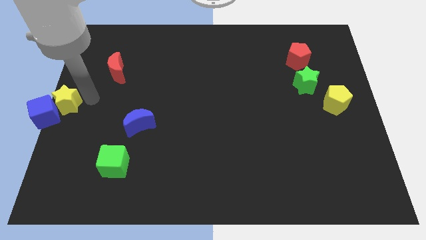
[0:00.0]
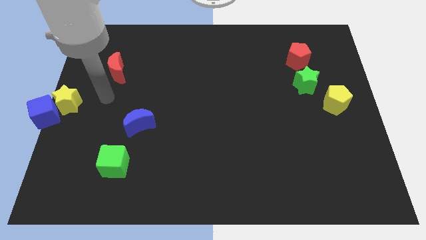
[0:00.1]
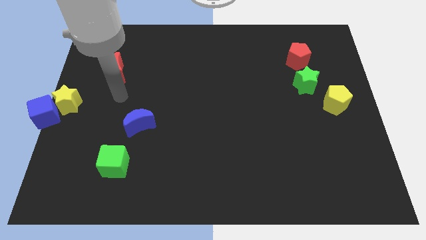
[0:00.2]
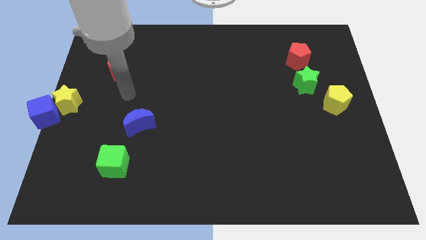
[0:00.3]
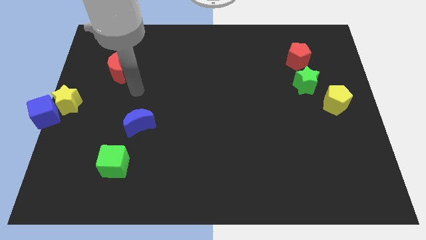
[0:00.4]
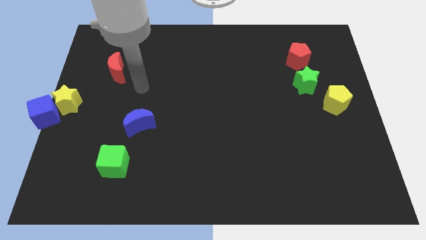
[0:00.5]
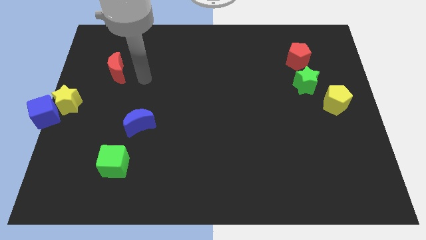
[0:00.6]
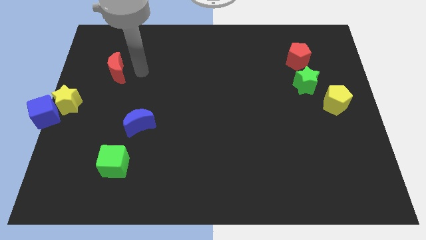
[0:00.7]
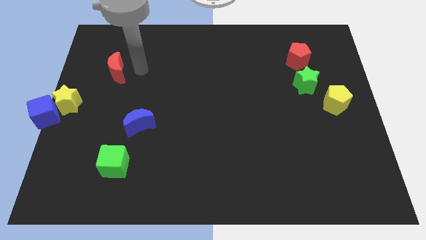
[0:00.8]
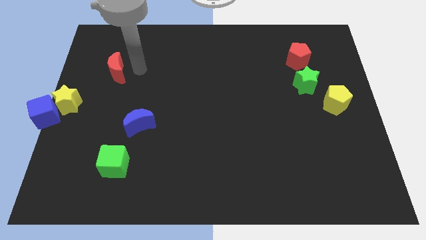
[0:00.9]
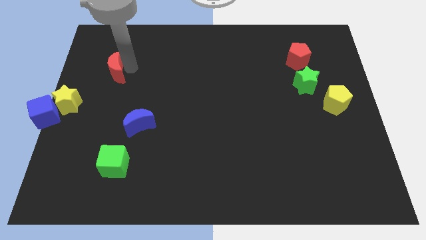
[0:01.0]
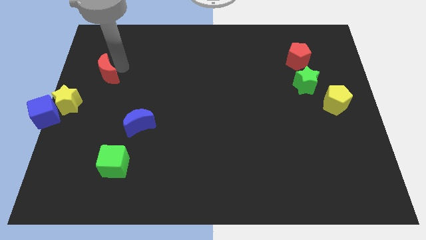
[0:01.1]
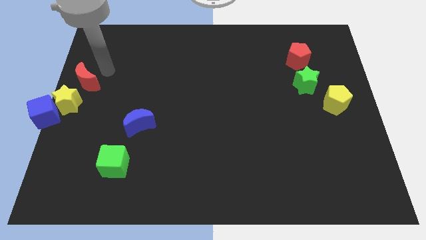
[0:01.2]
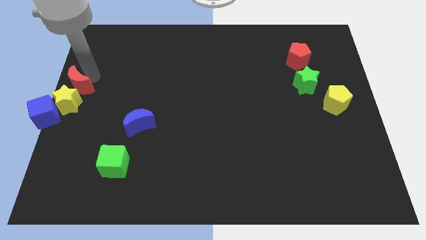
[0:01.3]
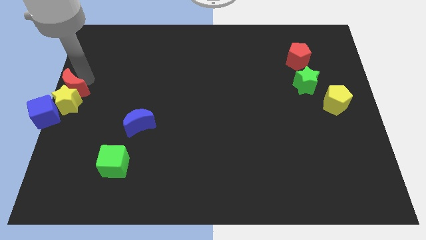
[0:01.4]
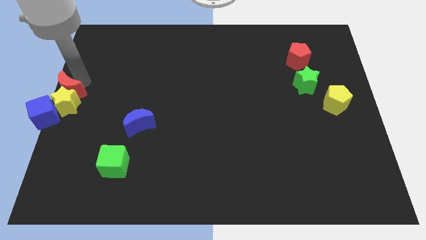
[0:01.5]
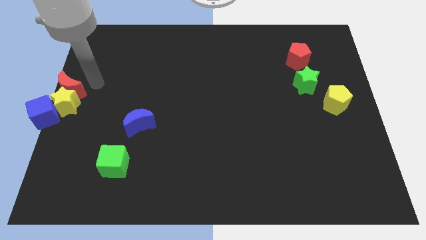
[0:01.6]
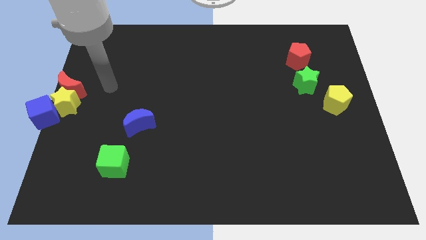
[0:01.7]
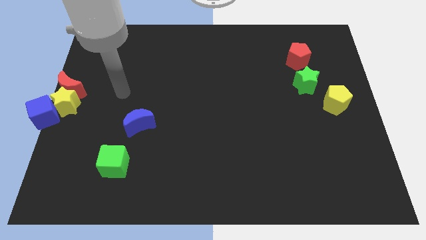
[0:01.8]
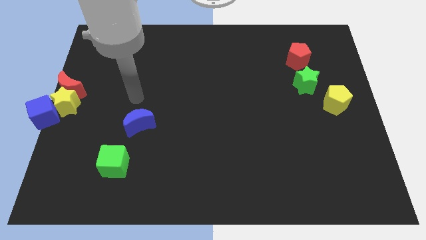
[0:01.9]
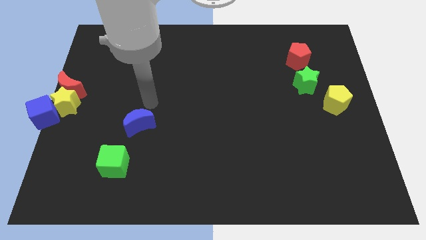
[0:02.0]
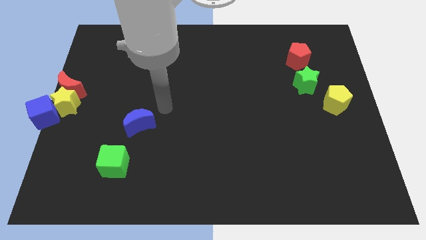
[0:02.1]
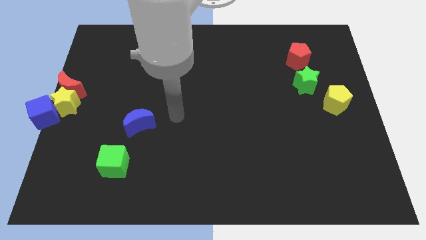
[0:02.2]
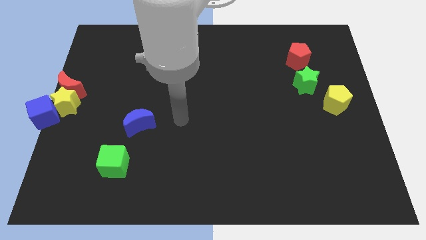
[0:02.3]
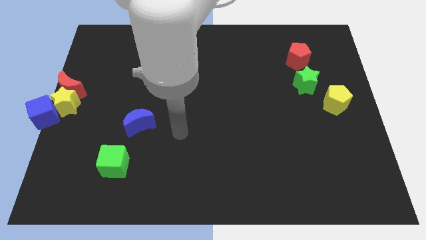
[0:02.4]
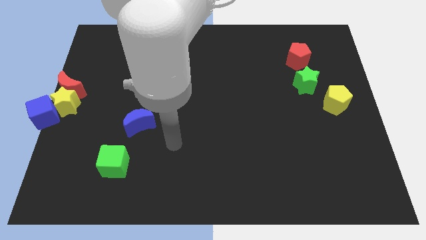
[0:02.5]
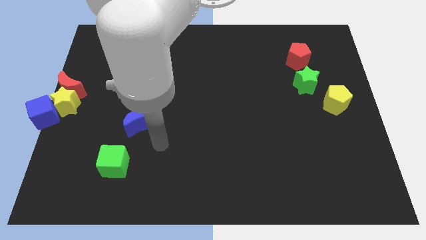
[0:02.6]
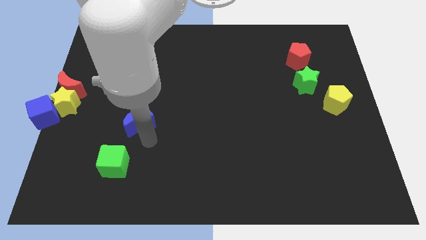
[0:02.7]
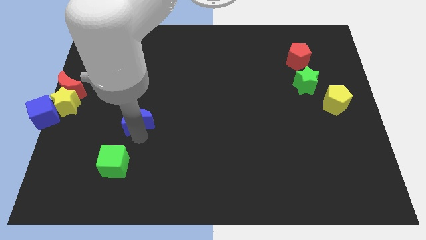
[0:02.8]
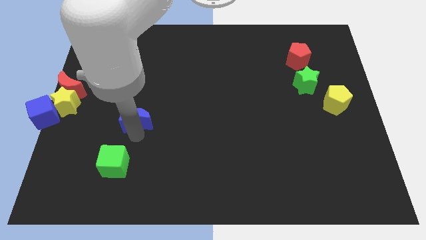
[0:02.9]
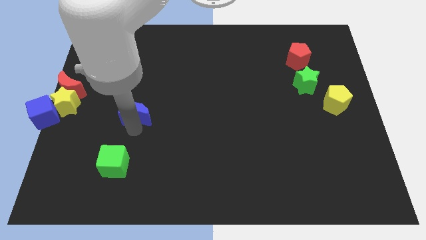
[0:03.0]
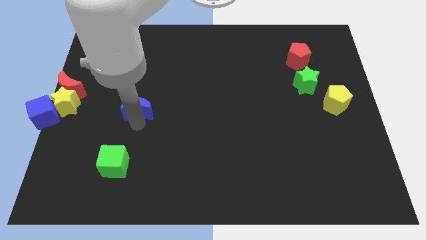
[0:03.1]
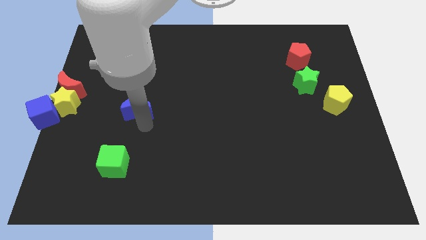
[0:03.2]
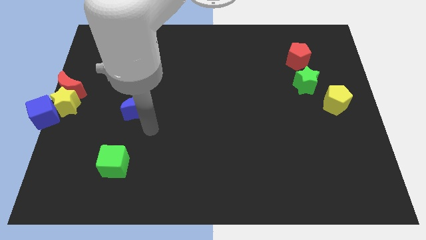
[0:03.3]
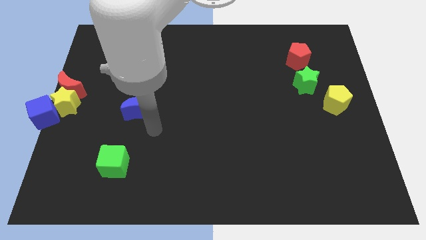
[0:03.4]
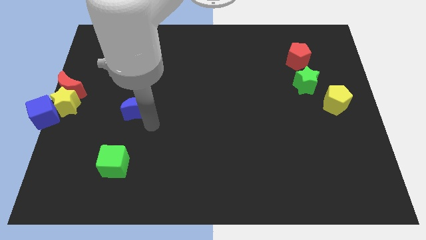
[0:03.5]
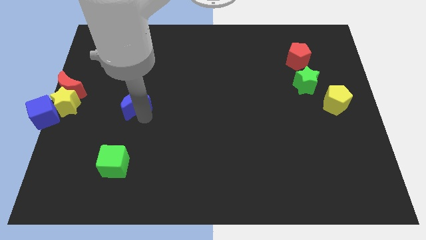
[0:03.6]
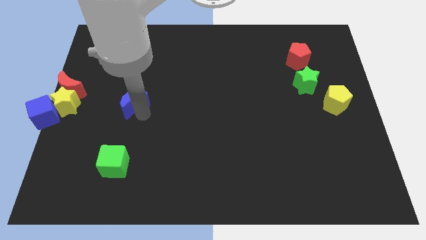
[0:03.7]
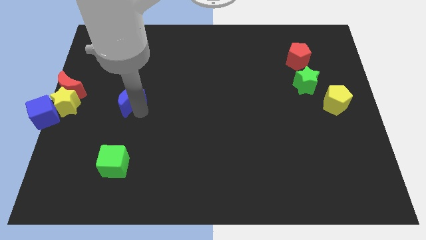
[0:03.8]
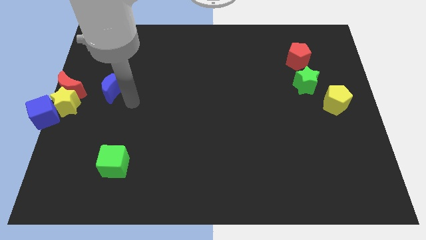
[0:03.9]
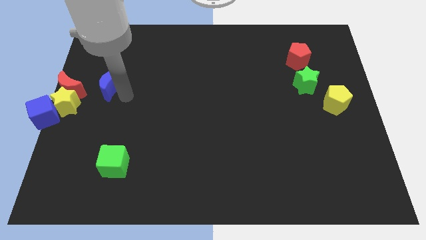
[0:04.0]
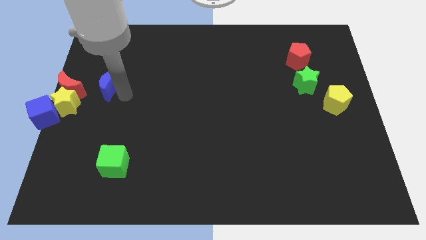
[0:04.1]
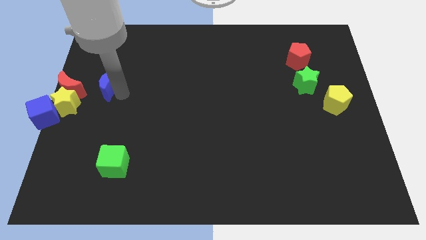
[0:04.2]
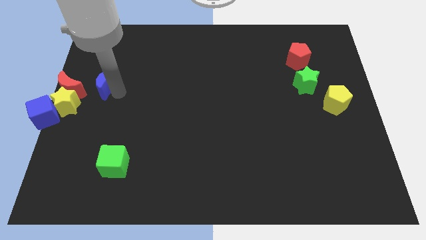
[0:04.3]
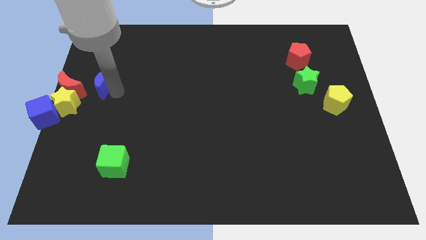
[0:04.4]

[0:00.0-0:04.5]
move the blue moon to the right side of the red moon

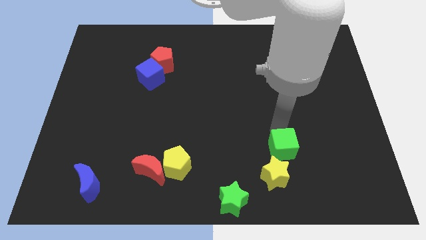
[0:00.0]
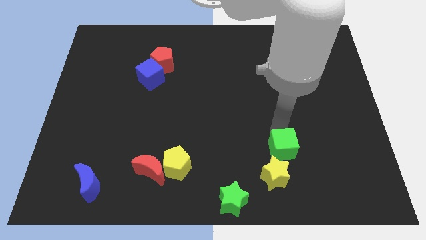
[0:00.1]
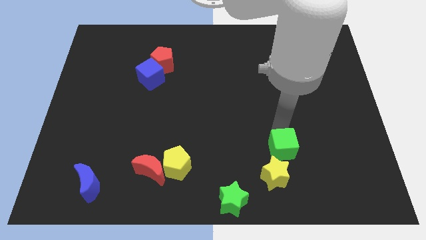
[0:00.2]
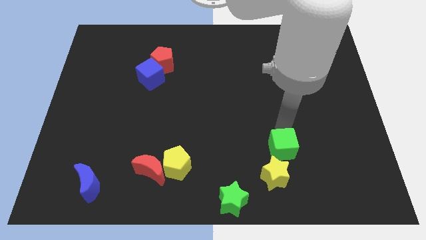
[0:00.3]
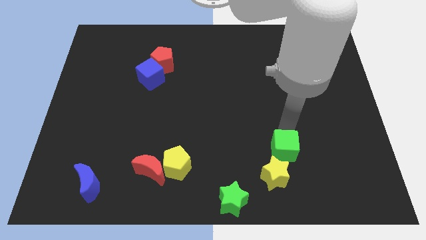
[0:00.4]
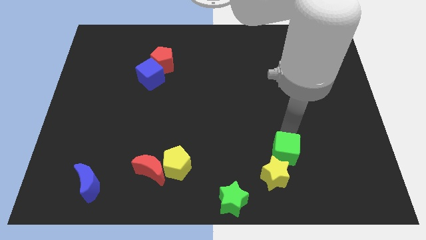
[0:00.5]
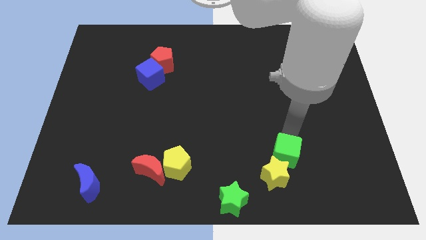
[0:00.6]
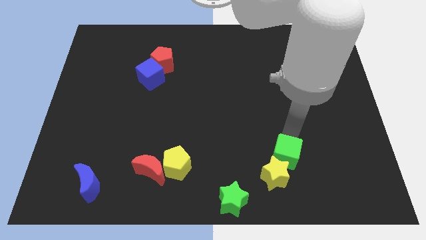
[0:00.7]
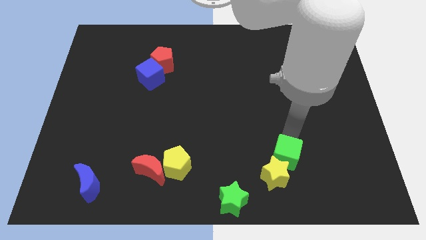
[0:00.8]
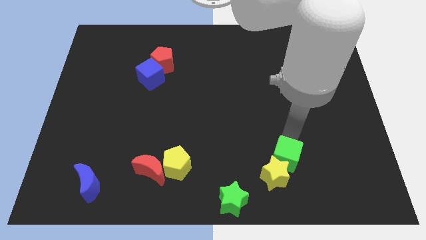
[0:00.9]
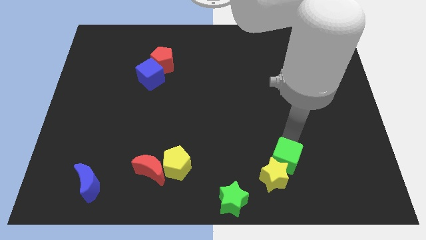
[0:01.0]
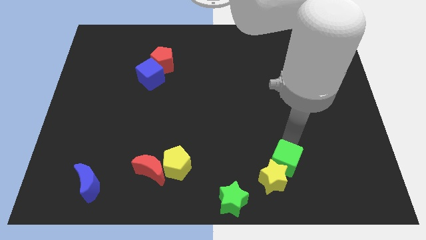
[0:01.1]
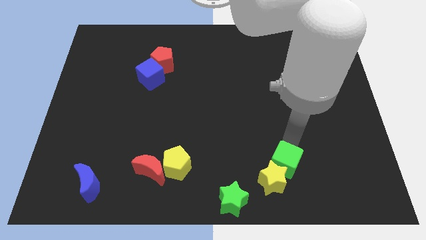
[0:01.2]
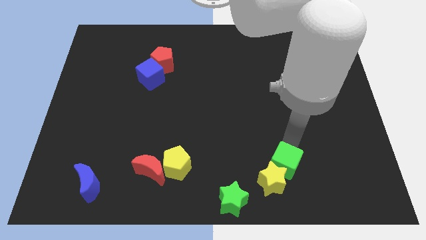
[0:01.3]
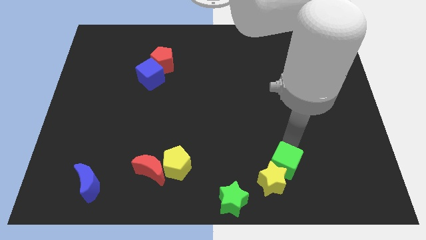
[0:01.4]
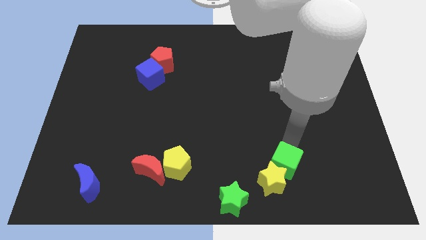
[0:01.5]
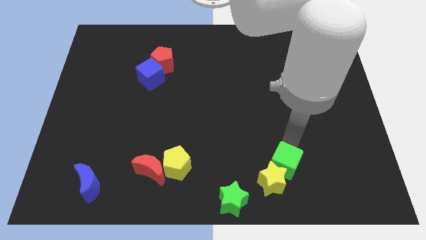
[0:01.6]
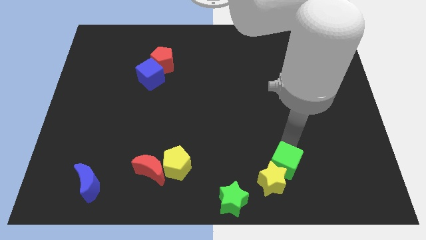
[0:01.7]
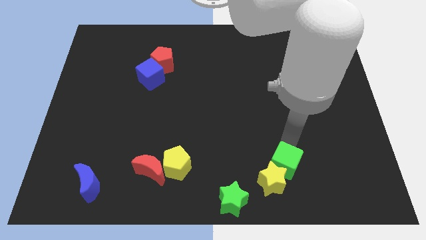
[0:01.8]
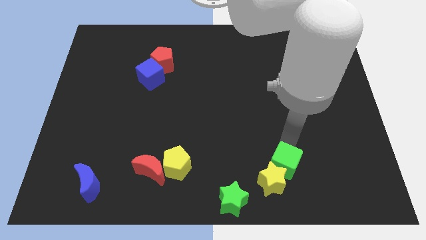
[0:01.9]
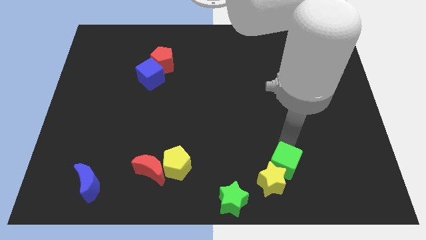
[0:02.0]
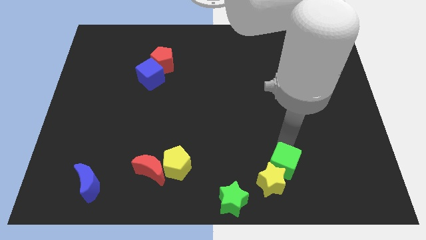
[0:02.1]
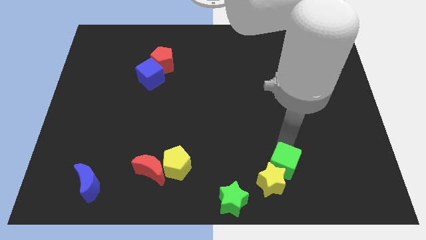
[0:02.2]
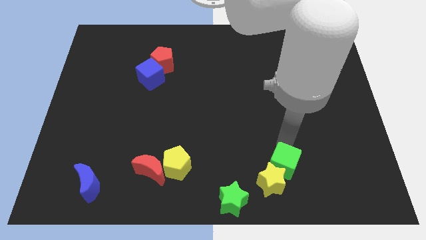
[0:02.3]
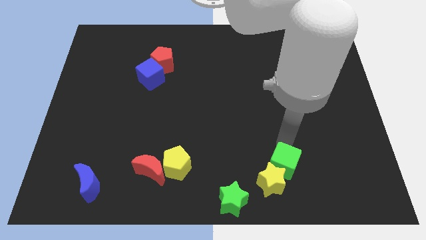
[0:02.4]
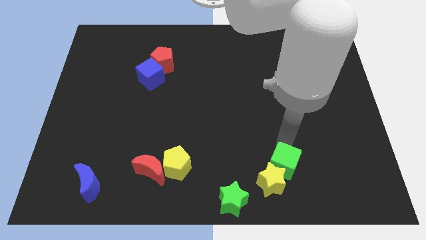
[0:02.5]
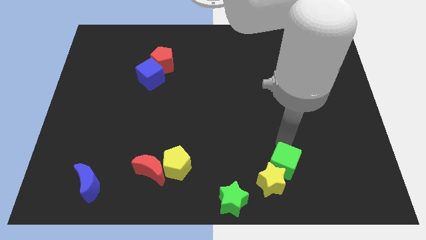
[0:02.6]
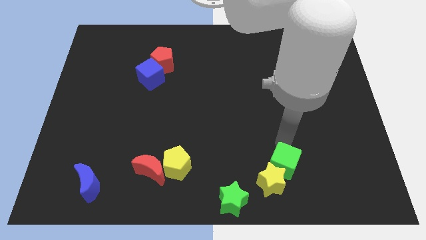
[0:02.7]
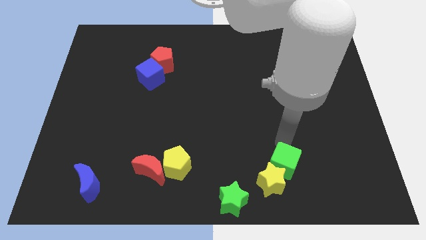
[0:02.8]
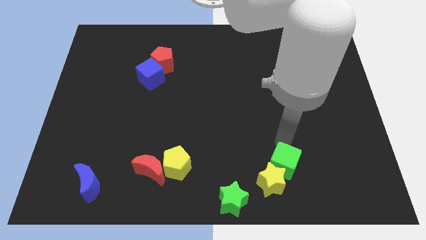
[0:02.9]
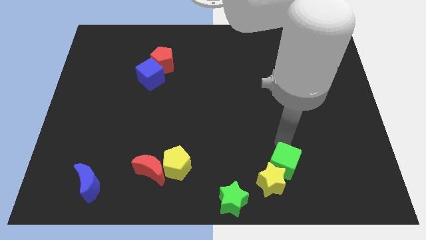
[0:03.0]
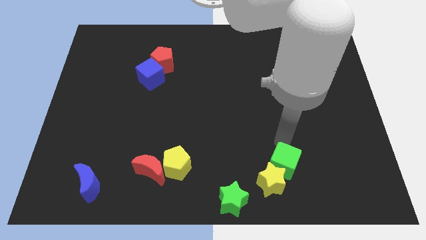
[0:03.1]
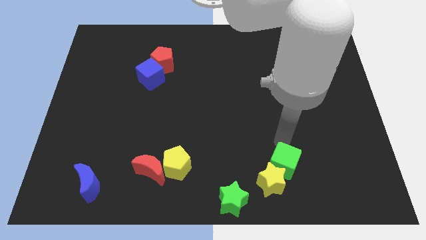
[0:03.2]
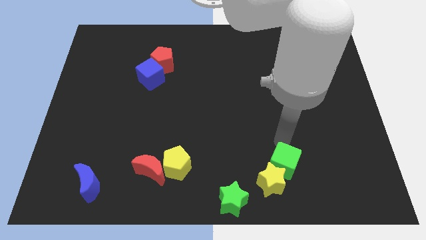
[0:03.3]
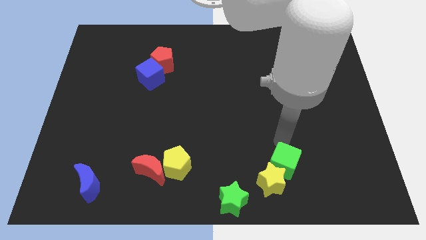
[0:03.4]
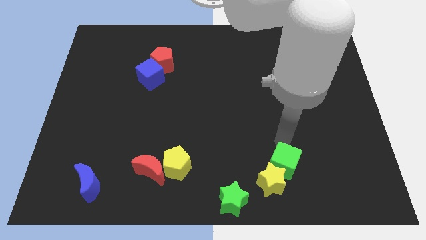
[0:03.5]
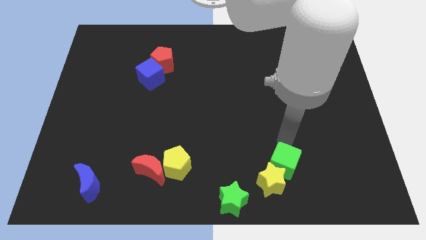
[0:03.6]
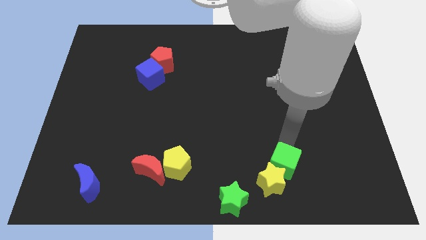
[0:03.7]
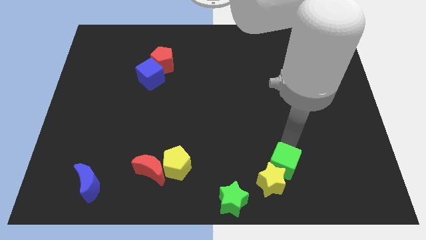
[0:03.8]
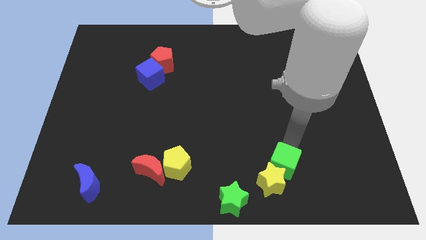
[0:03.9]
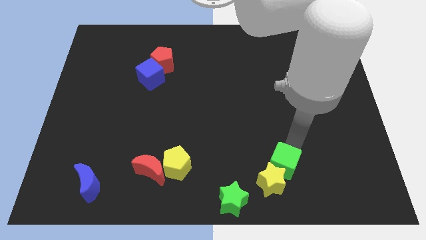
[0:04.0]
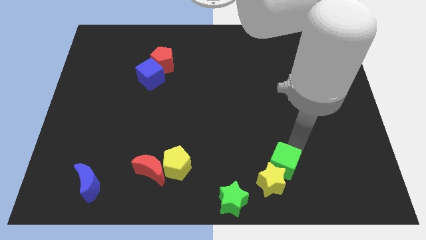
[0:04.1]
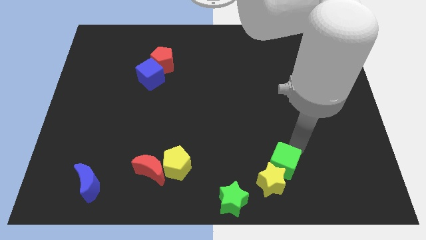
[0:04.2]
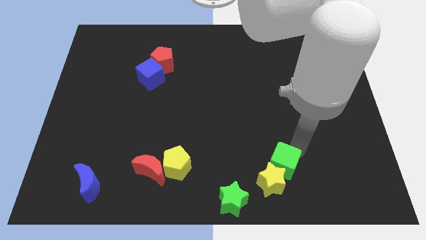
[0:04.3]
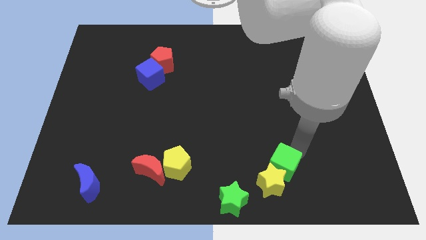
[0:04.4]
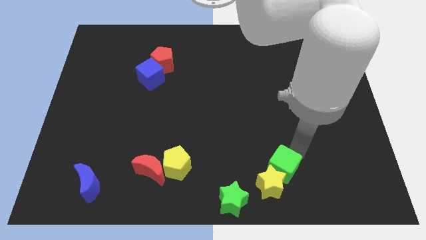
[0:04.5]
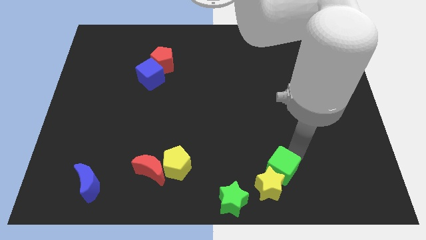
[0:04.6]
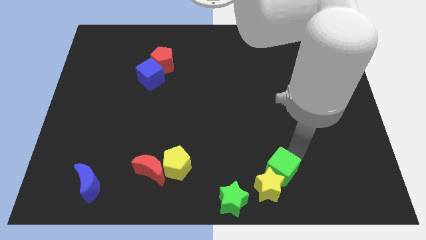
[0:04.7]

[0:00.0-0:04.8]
push the green cube in to the yellow star
